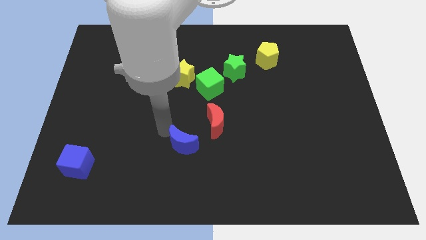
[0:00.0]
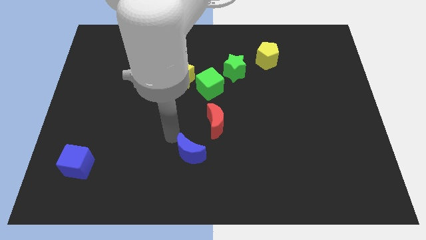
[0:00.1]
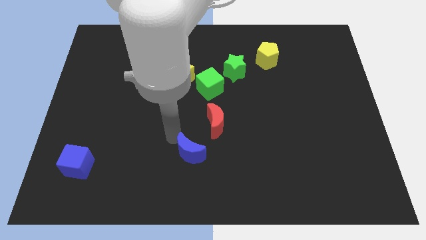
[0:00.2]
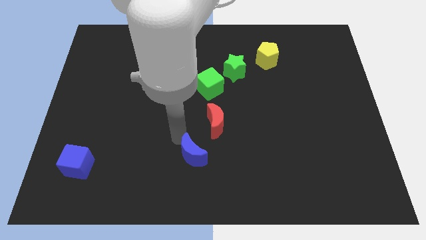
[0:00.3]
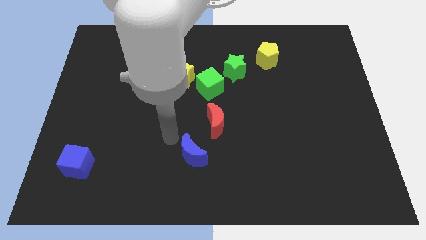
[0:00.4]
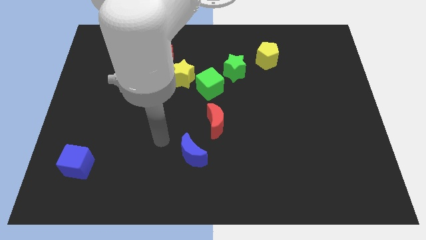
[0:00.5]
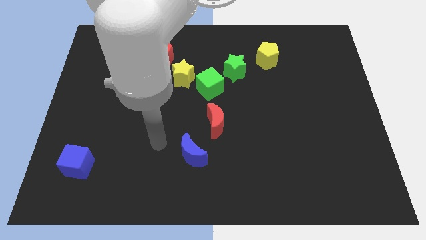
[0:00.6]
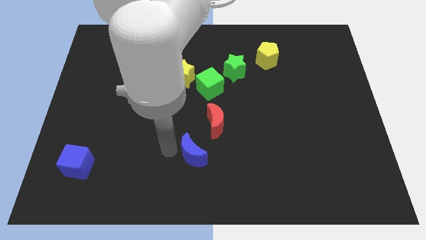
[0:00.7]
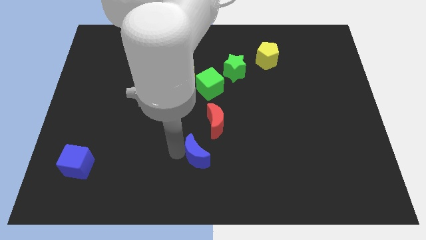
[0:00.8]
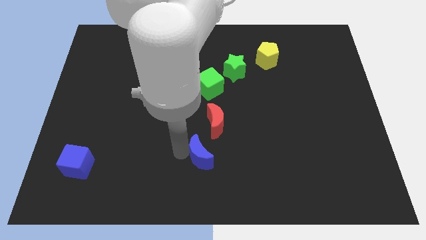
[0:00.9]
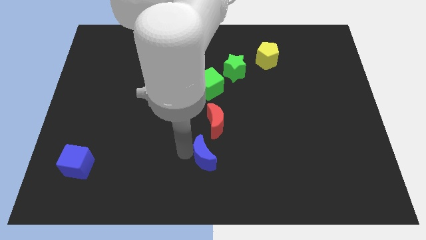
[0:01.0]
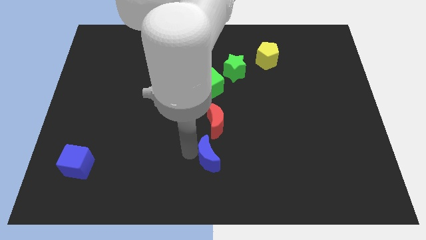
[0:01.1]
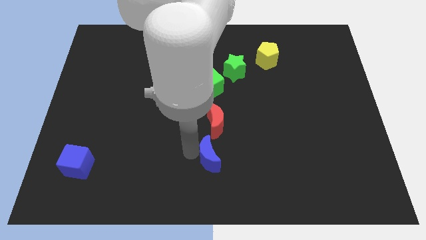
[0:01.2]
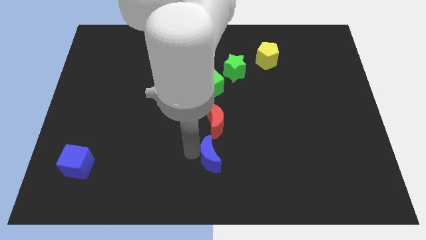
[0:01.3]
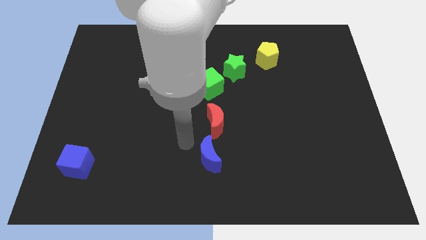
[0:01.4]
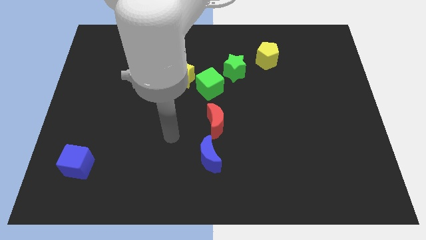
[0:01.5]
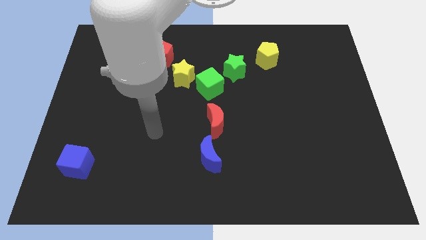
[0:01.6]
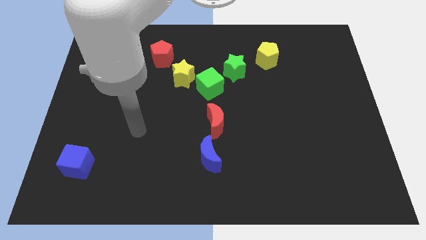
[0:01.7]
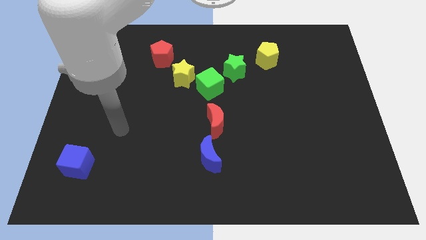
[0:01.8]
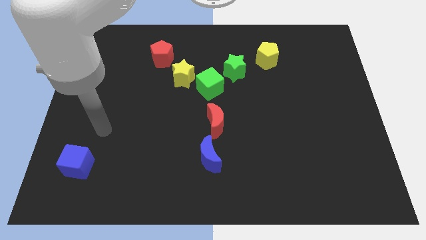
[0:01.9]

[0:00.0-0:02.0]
place the blue moon to the bottom of the red moon

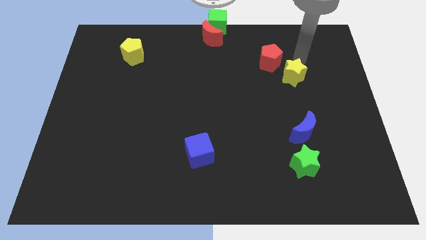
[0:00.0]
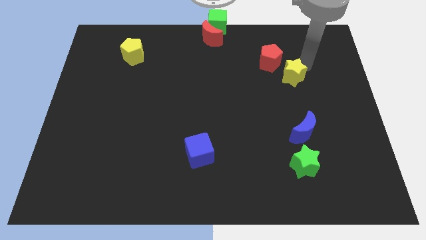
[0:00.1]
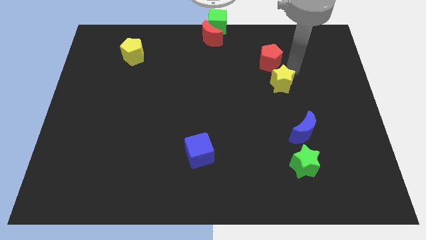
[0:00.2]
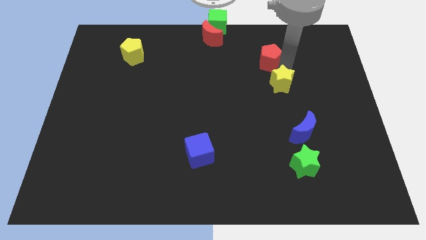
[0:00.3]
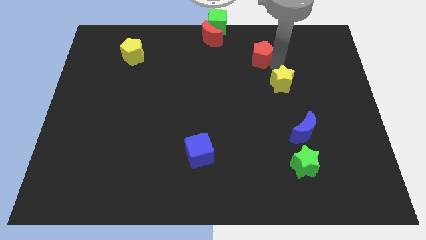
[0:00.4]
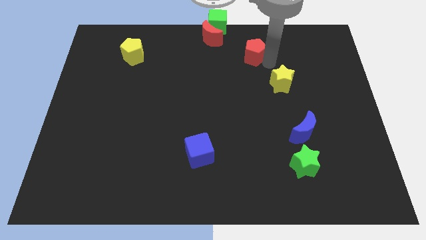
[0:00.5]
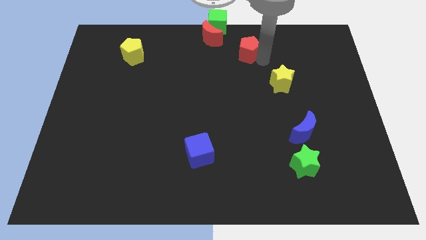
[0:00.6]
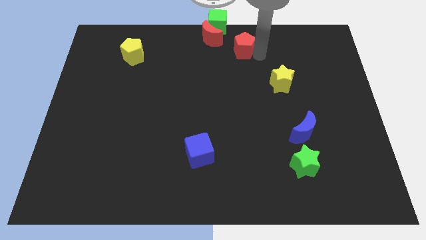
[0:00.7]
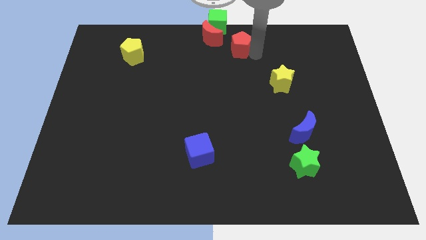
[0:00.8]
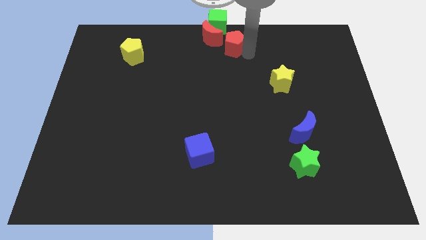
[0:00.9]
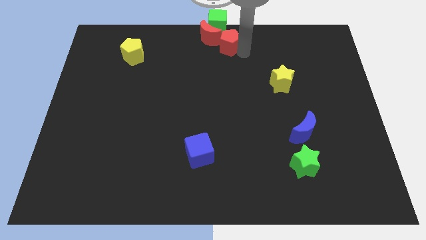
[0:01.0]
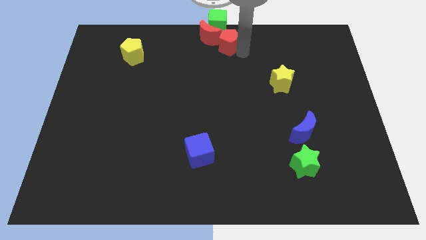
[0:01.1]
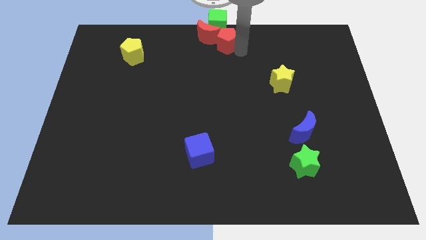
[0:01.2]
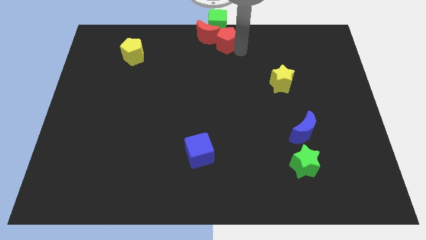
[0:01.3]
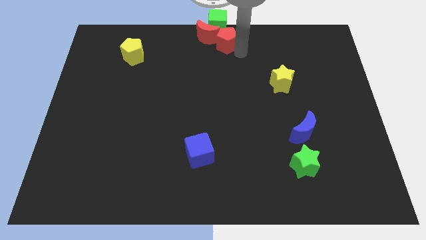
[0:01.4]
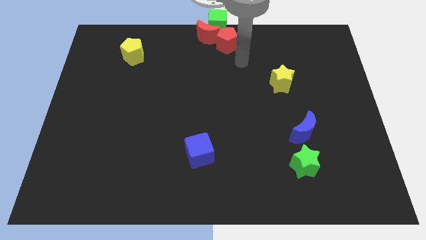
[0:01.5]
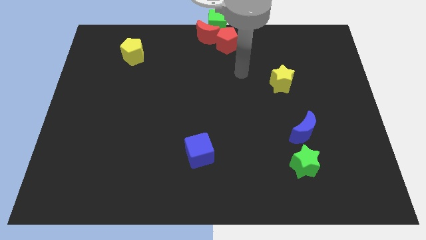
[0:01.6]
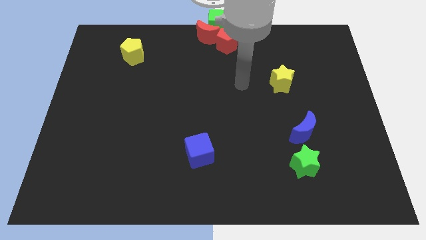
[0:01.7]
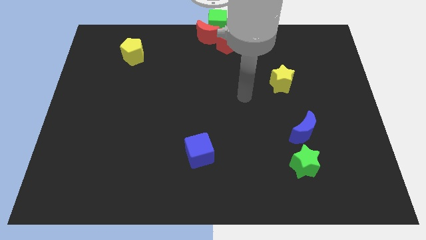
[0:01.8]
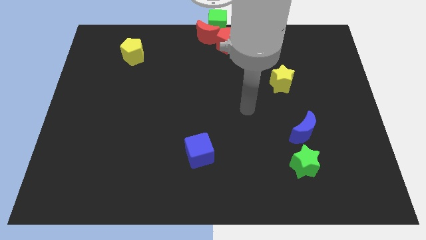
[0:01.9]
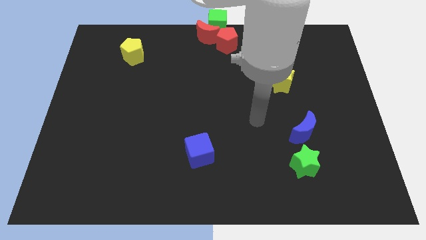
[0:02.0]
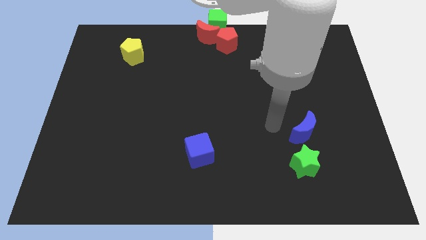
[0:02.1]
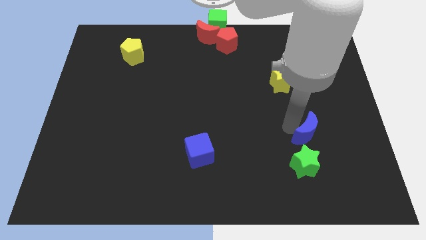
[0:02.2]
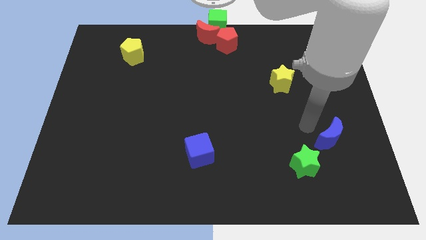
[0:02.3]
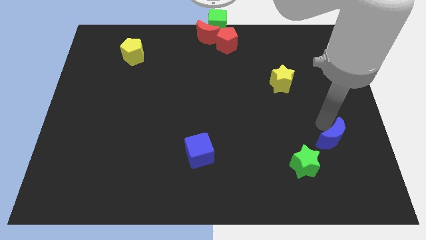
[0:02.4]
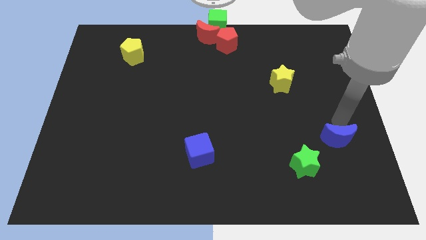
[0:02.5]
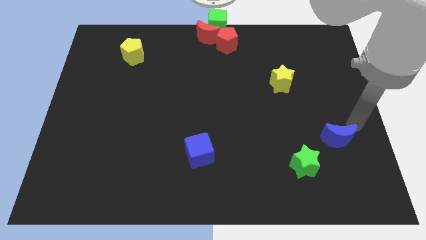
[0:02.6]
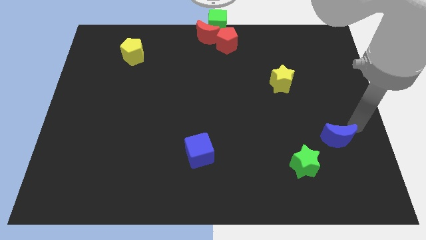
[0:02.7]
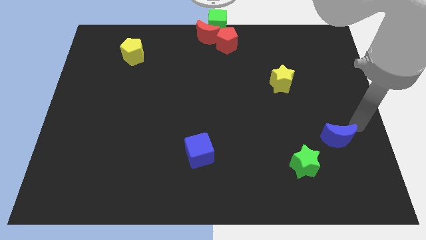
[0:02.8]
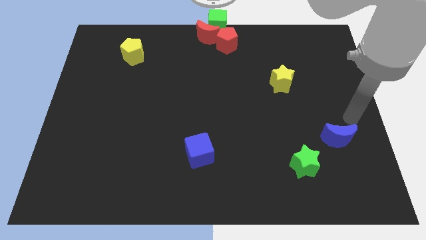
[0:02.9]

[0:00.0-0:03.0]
slightly touch the blue crescent

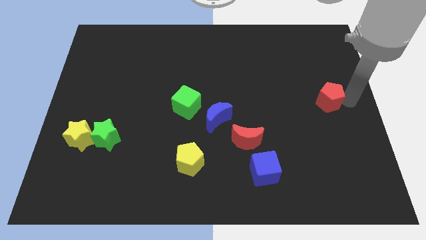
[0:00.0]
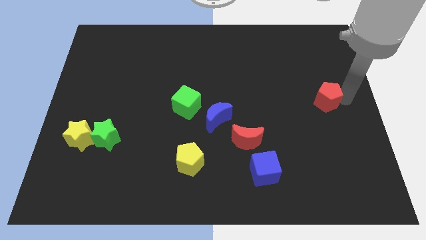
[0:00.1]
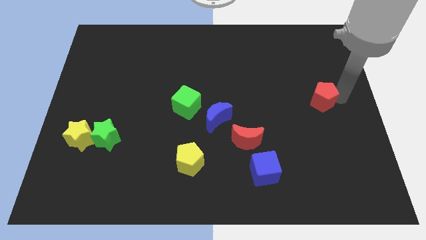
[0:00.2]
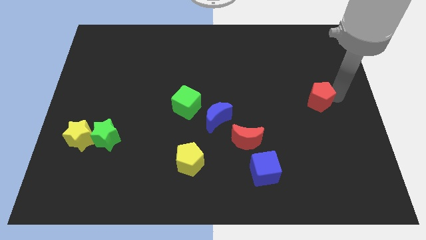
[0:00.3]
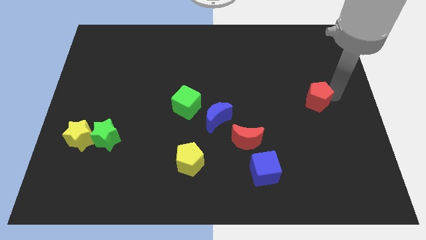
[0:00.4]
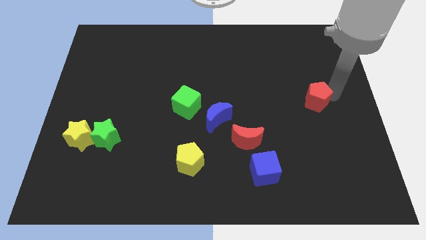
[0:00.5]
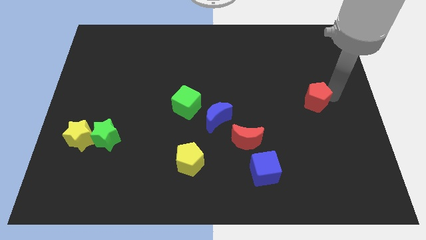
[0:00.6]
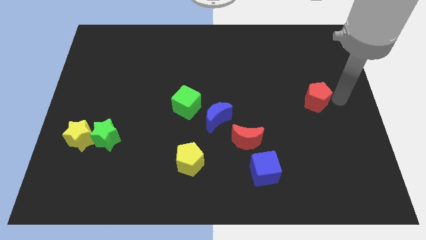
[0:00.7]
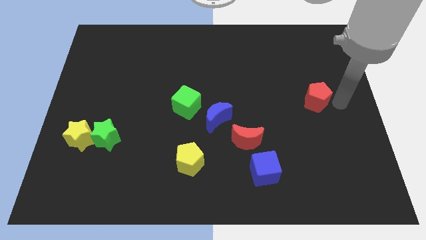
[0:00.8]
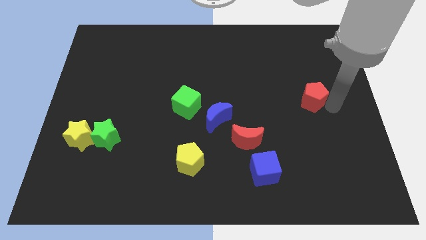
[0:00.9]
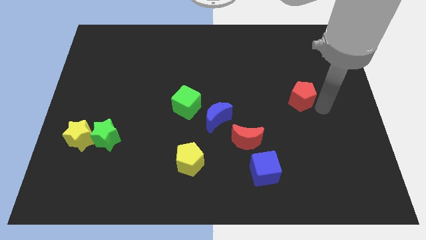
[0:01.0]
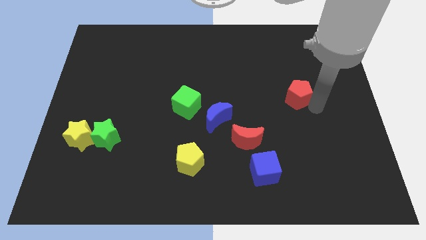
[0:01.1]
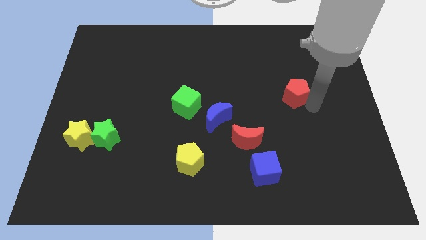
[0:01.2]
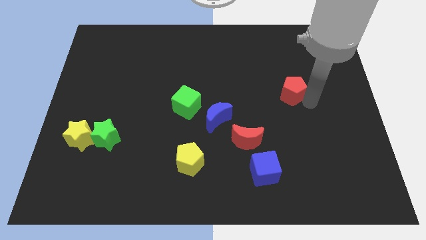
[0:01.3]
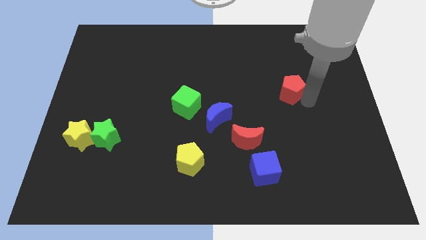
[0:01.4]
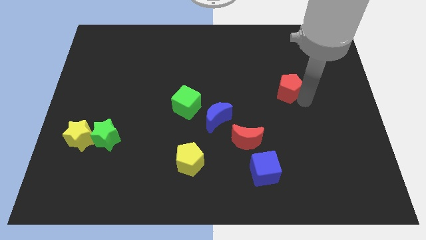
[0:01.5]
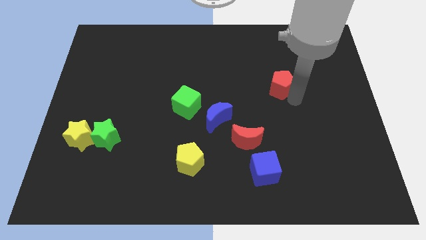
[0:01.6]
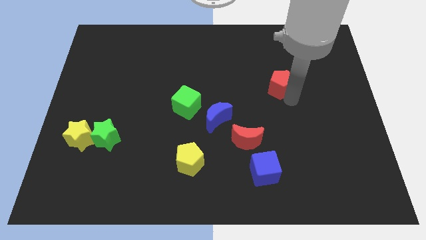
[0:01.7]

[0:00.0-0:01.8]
drag the red pentagon to the left side of the board

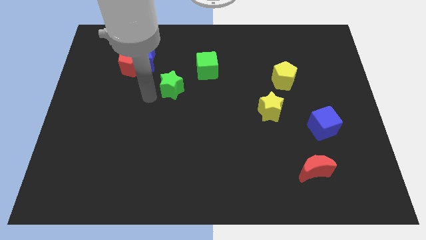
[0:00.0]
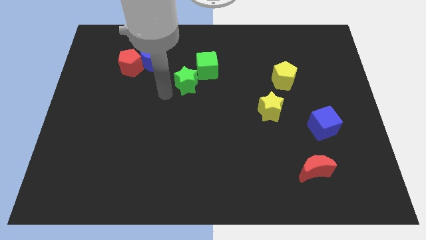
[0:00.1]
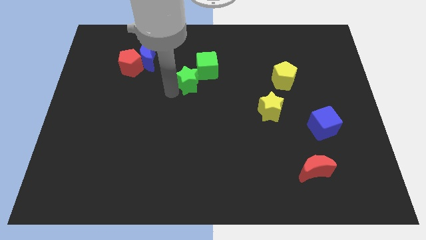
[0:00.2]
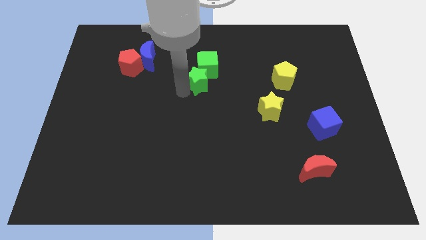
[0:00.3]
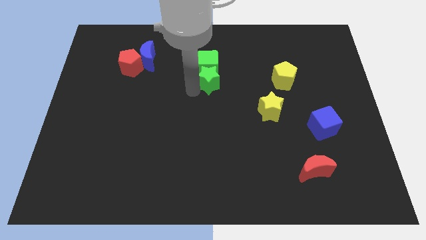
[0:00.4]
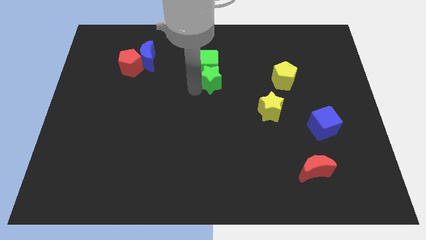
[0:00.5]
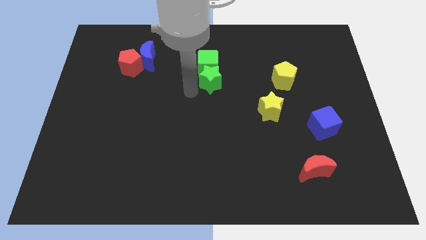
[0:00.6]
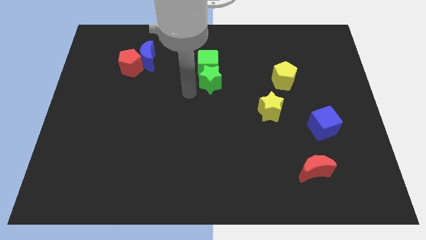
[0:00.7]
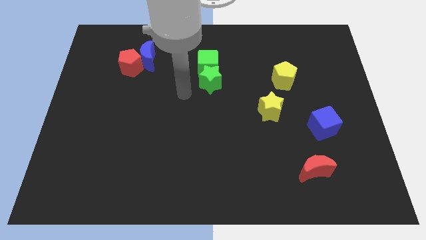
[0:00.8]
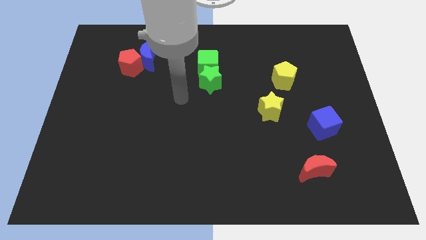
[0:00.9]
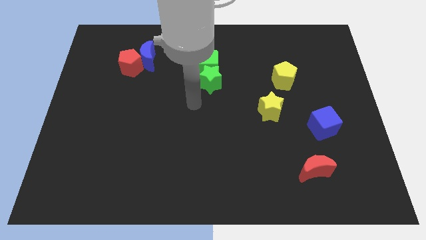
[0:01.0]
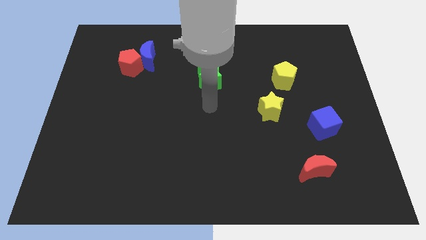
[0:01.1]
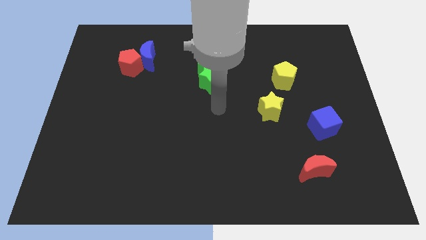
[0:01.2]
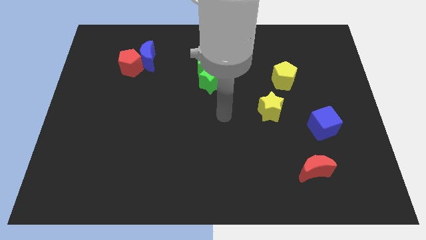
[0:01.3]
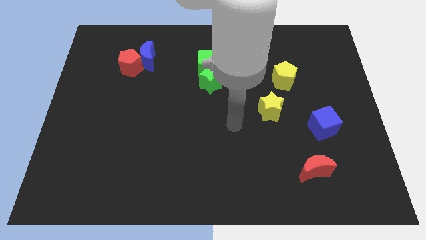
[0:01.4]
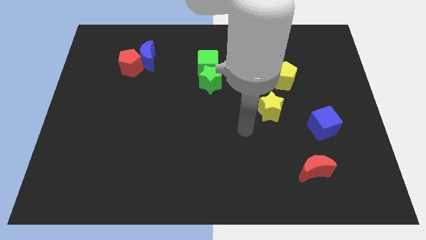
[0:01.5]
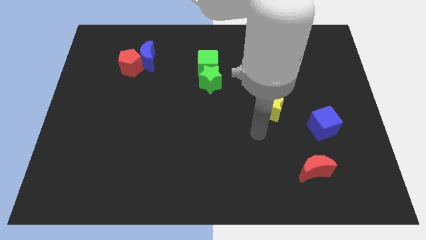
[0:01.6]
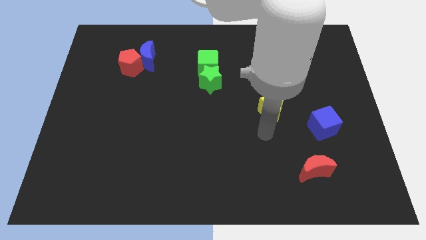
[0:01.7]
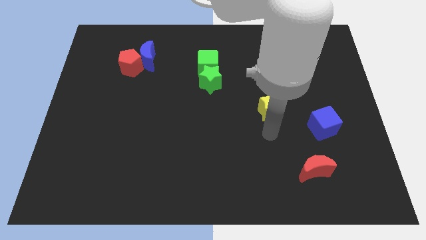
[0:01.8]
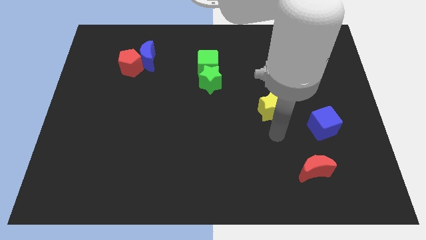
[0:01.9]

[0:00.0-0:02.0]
adjust the green star below the green cube

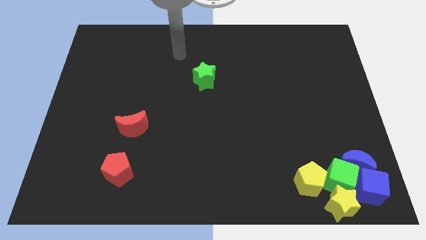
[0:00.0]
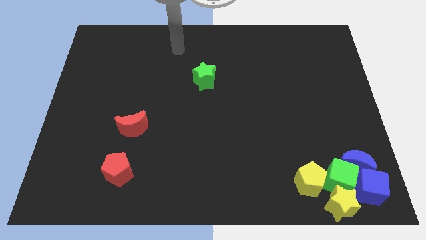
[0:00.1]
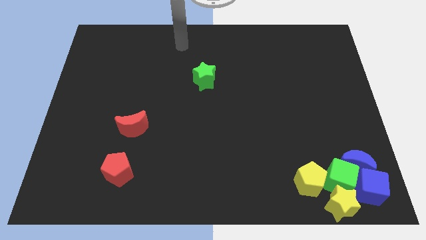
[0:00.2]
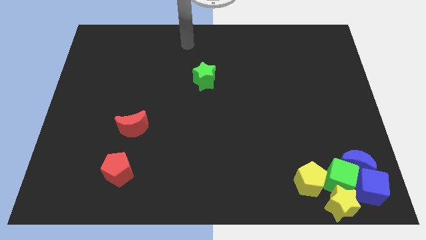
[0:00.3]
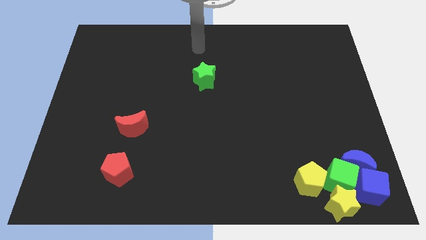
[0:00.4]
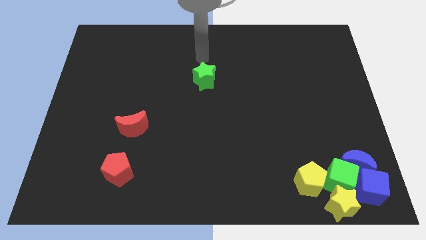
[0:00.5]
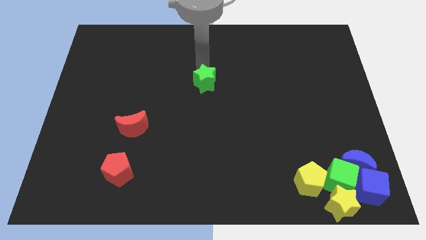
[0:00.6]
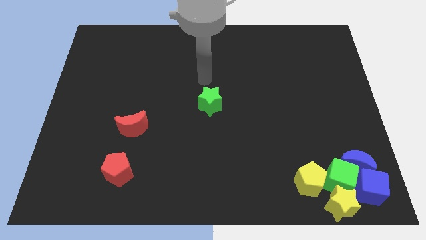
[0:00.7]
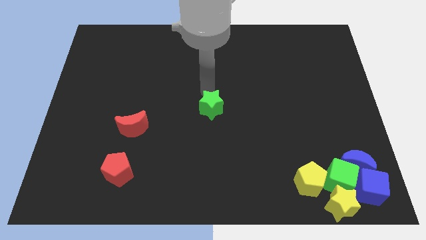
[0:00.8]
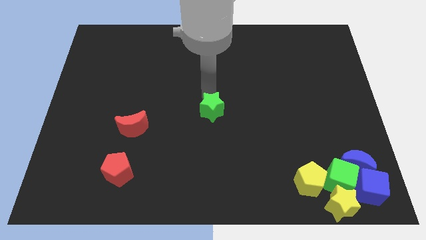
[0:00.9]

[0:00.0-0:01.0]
push green star to the center of the board
